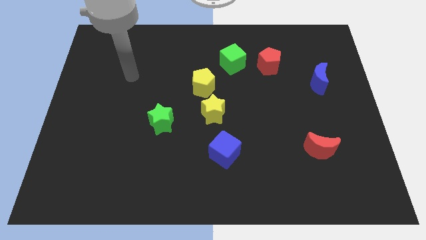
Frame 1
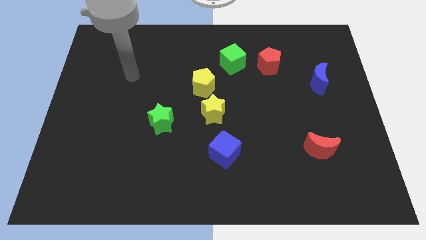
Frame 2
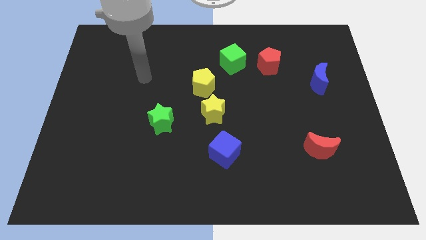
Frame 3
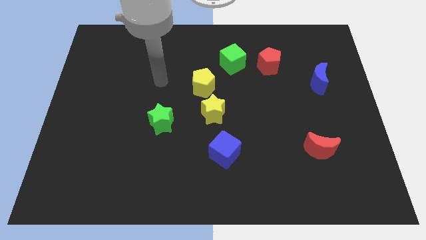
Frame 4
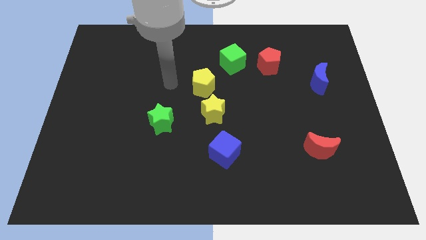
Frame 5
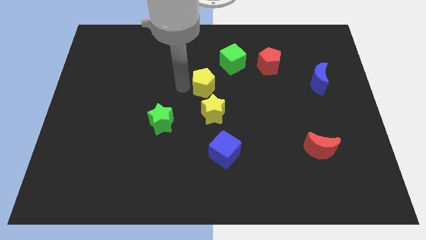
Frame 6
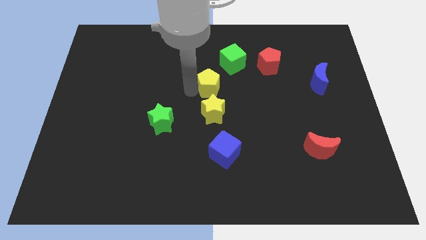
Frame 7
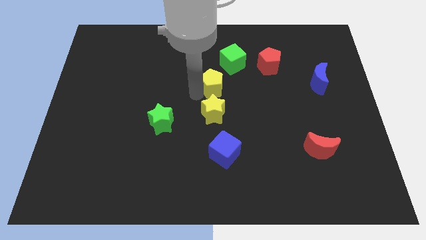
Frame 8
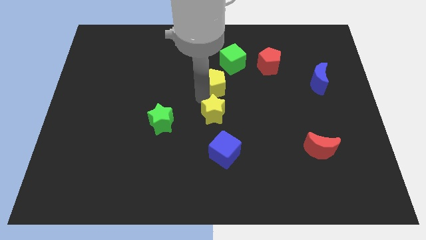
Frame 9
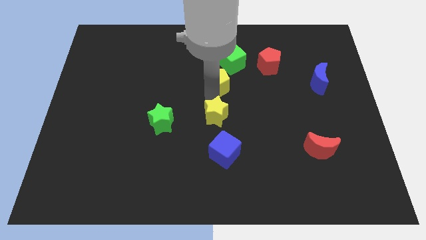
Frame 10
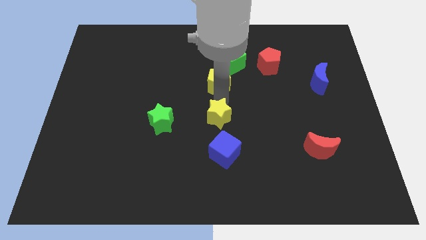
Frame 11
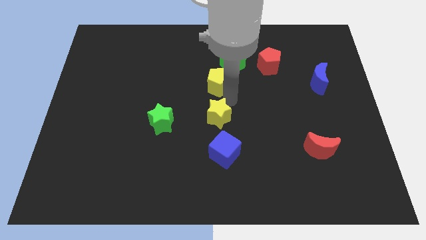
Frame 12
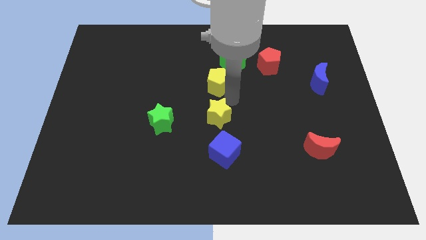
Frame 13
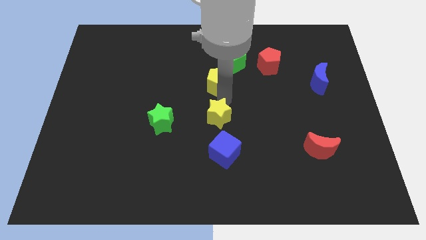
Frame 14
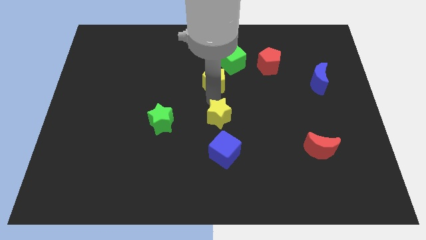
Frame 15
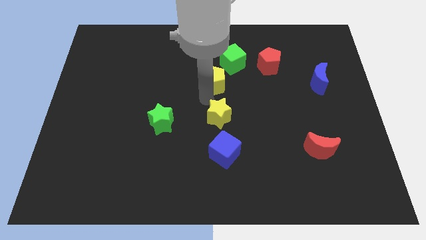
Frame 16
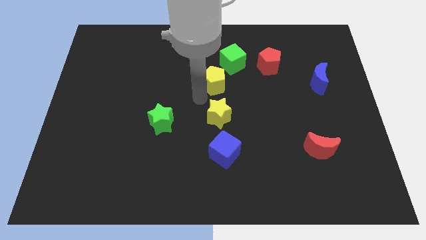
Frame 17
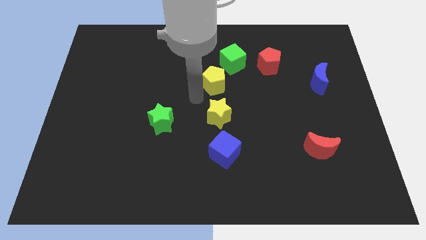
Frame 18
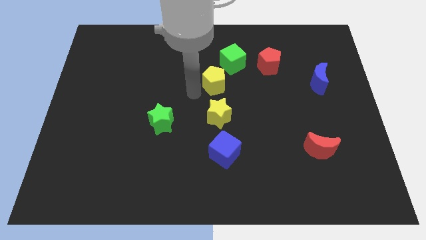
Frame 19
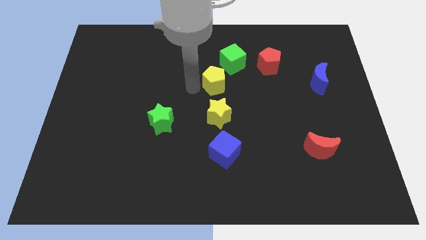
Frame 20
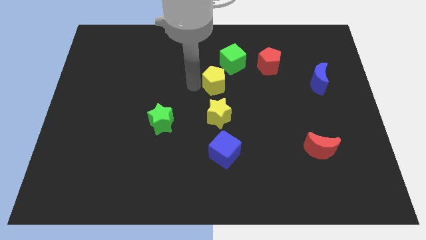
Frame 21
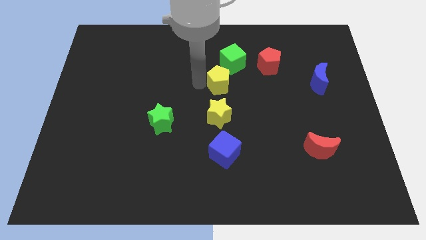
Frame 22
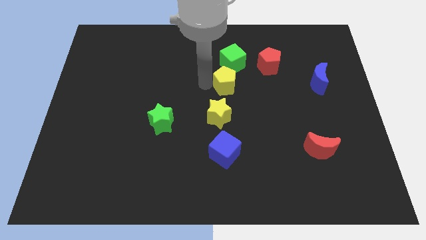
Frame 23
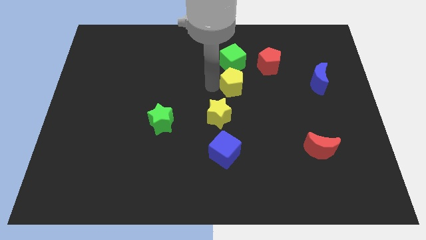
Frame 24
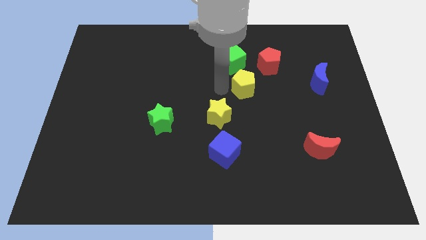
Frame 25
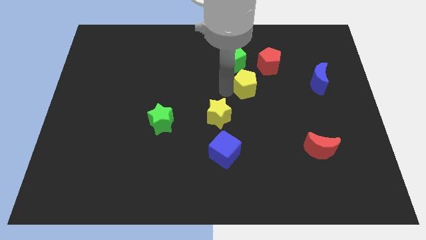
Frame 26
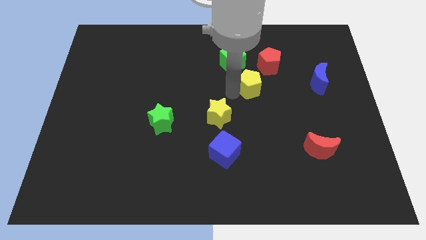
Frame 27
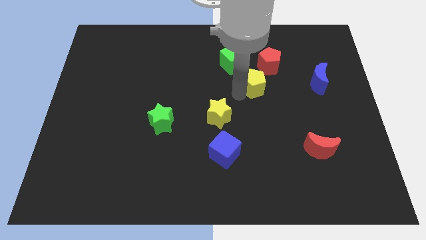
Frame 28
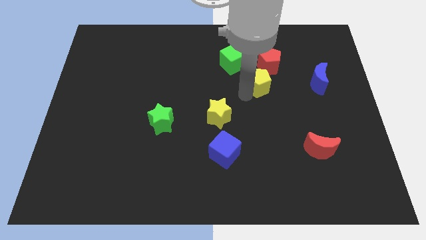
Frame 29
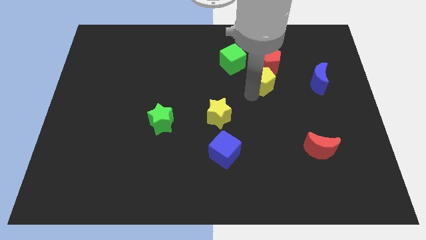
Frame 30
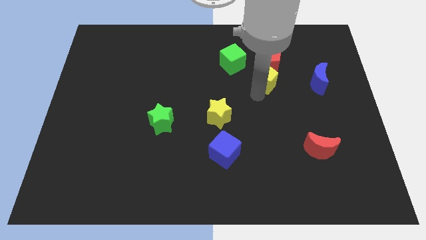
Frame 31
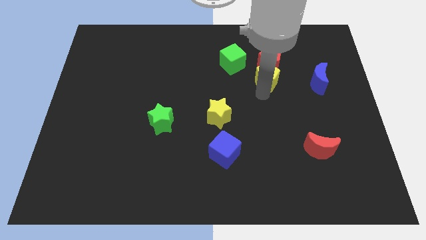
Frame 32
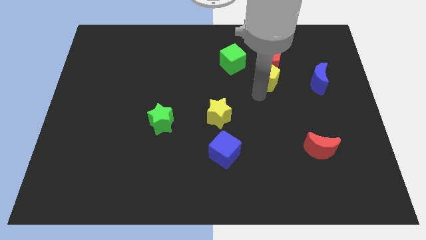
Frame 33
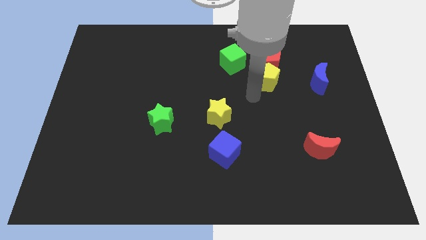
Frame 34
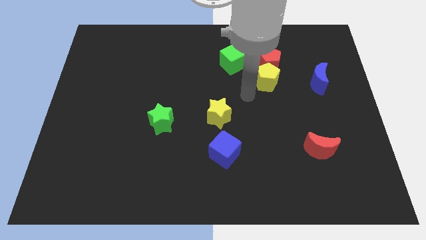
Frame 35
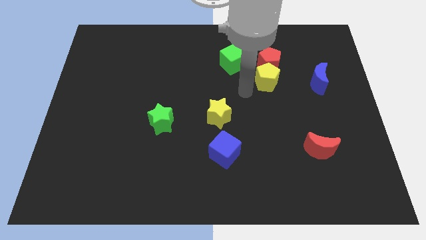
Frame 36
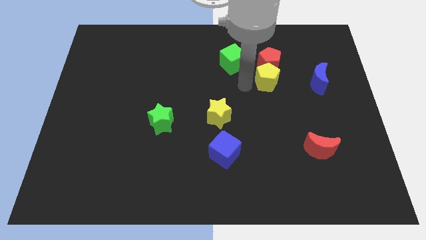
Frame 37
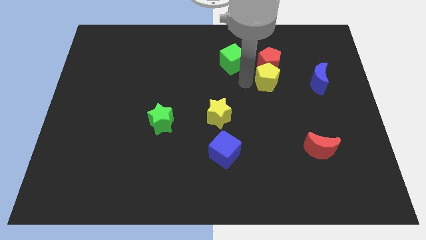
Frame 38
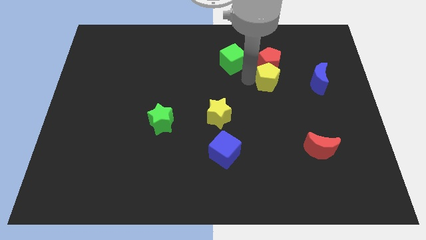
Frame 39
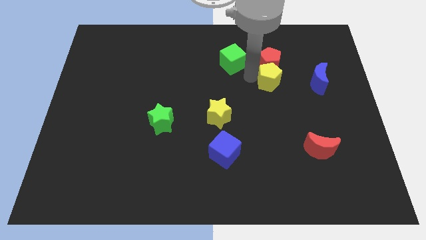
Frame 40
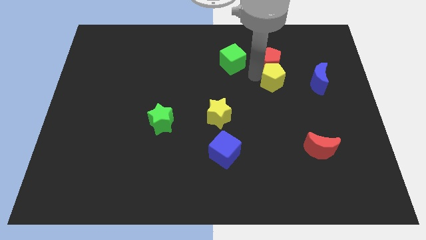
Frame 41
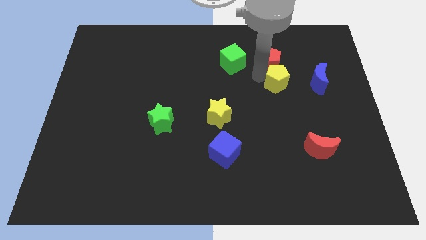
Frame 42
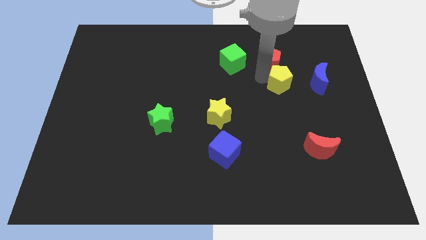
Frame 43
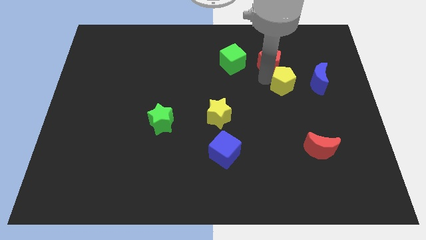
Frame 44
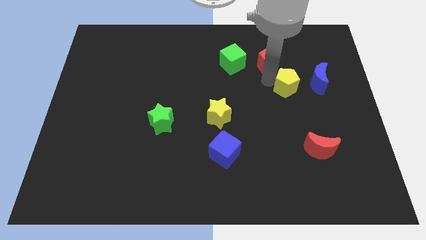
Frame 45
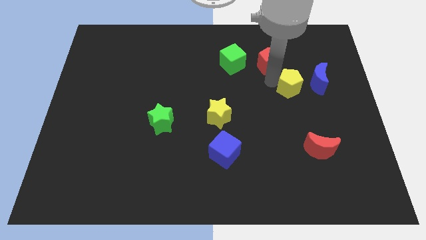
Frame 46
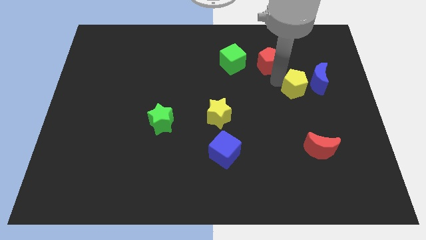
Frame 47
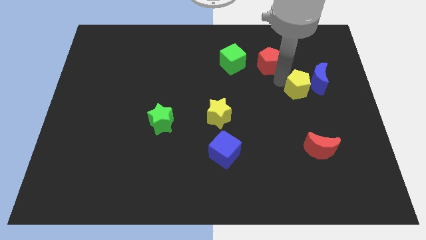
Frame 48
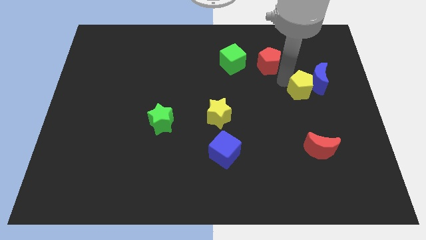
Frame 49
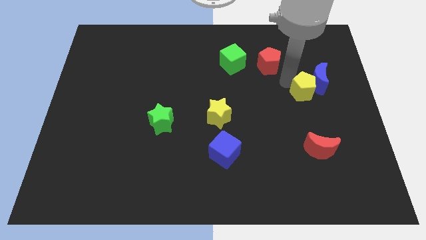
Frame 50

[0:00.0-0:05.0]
move the yellow pentagon close to the blue moon

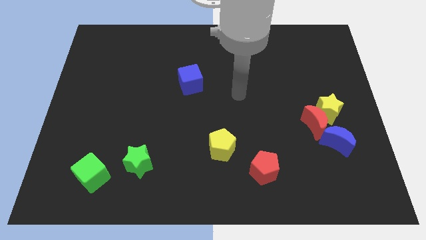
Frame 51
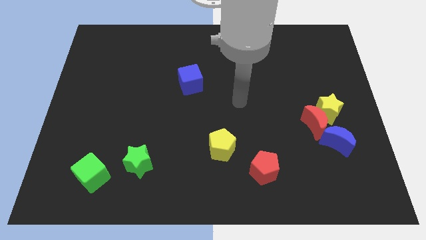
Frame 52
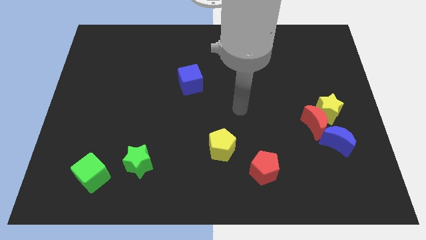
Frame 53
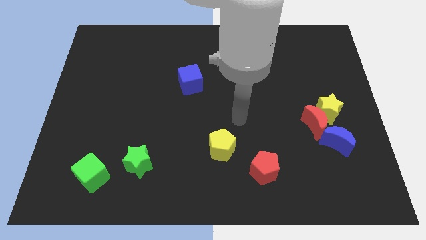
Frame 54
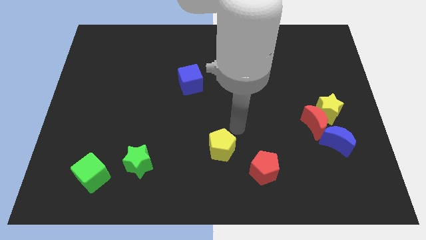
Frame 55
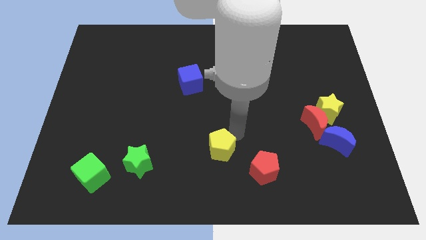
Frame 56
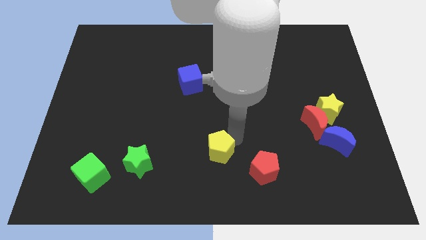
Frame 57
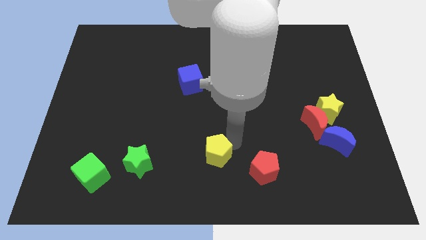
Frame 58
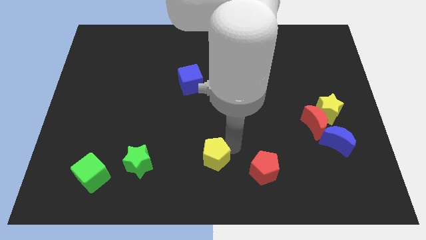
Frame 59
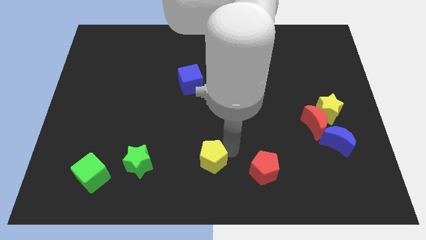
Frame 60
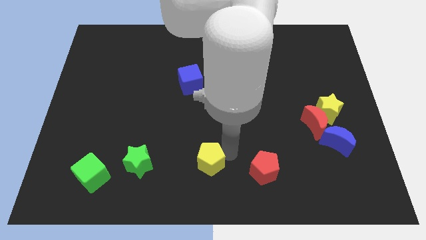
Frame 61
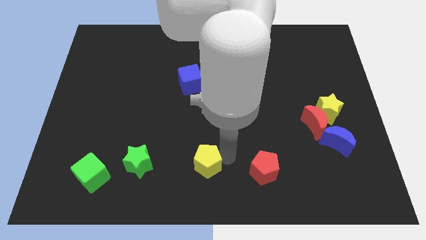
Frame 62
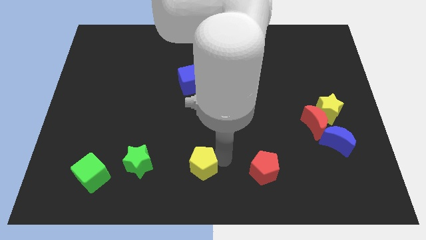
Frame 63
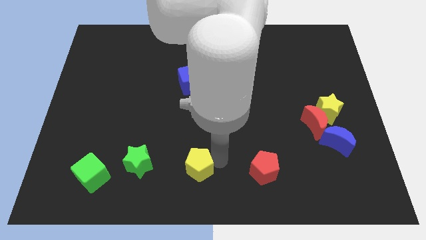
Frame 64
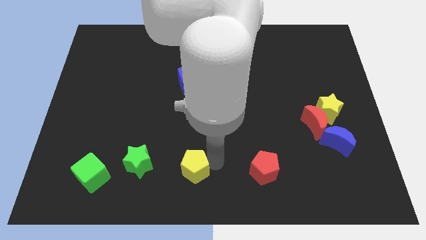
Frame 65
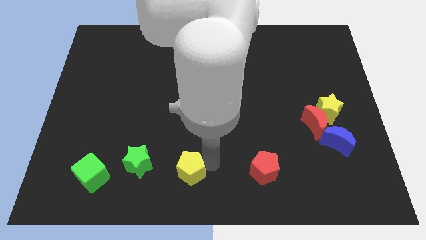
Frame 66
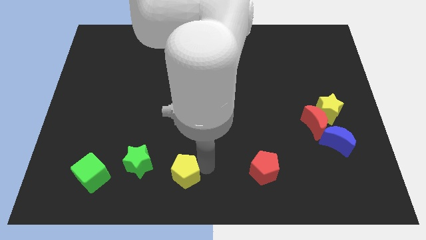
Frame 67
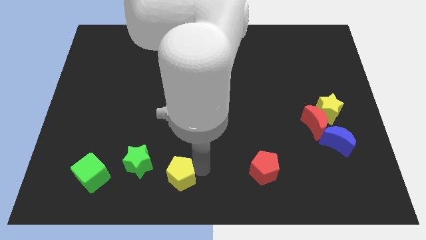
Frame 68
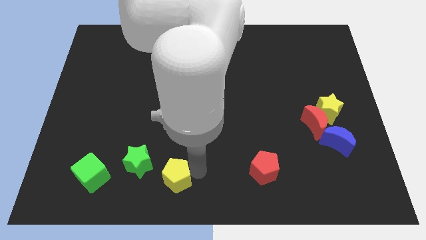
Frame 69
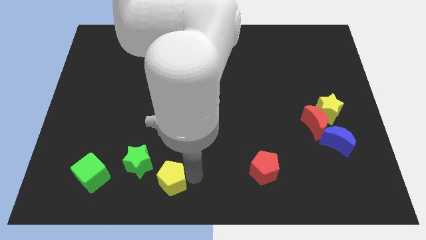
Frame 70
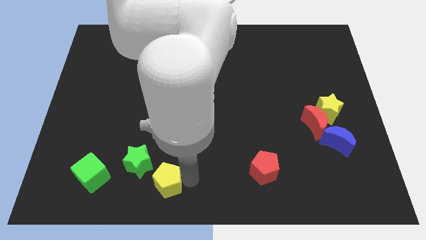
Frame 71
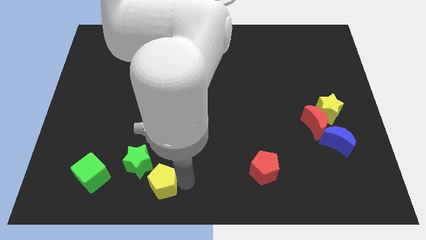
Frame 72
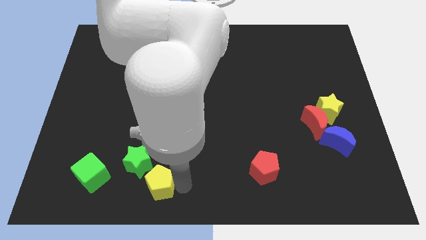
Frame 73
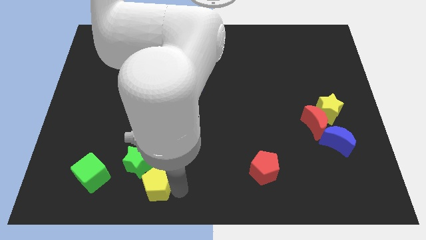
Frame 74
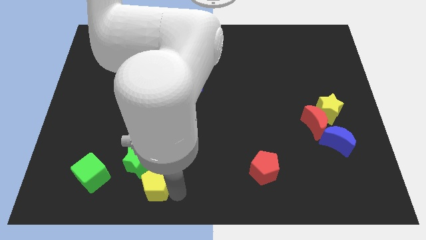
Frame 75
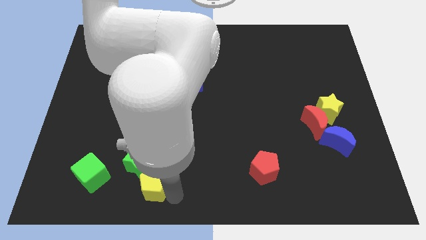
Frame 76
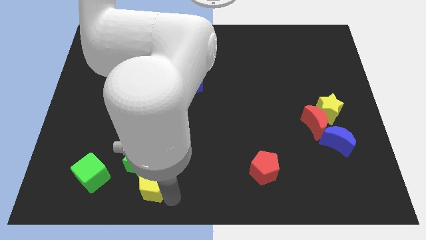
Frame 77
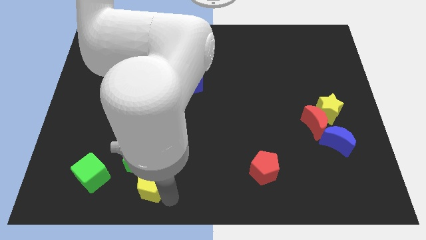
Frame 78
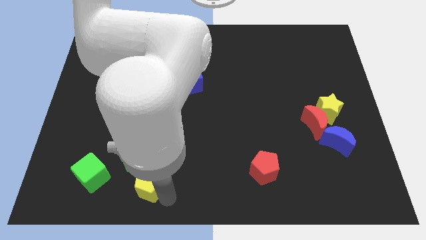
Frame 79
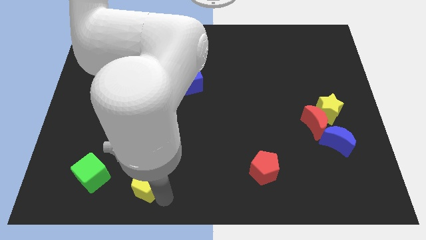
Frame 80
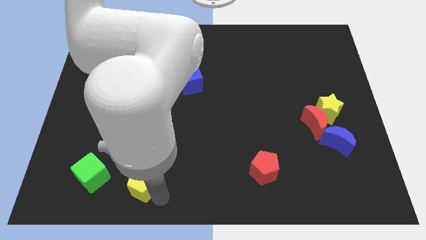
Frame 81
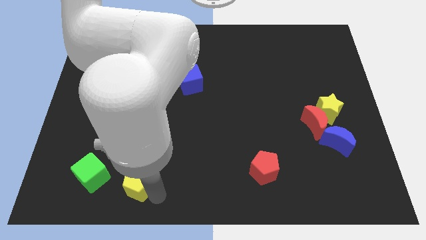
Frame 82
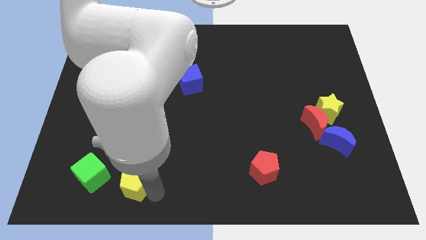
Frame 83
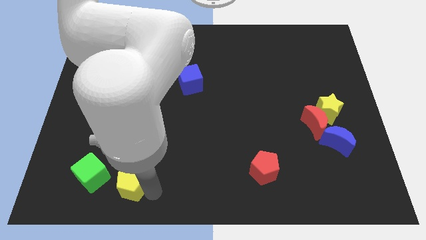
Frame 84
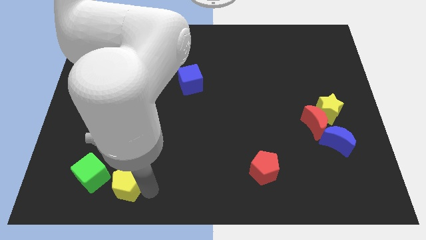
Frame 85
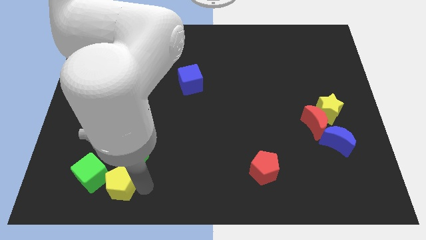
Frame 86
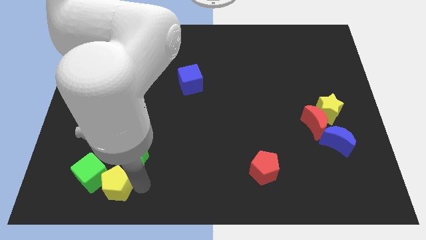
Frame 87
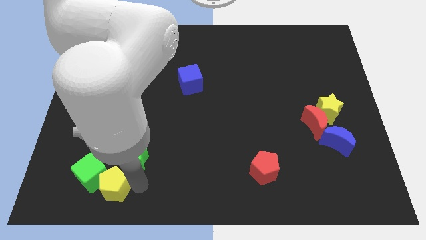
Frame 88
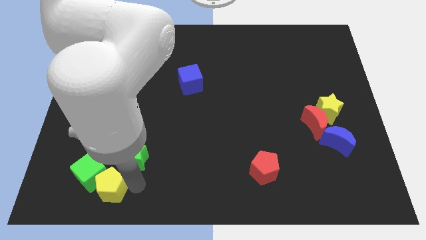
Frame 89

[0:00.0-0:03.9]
put the yellow pentagon towards the green cube
